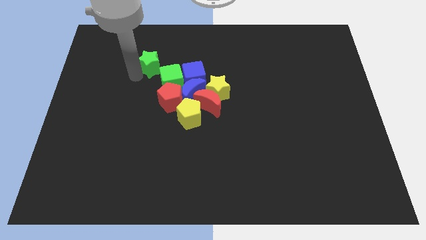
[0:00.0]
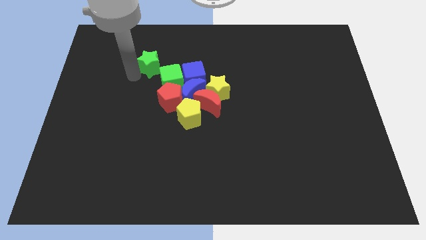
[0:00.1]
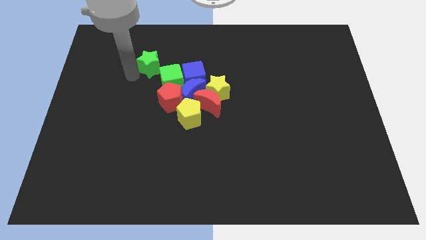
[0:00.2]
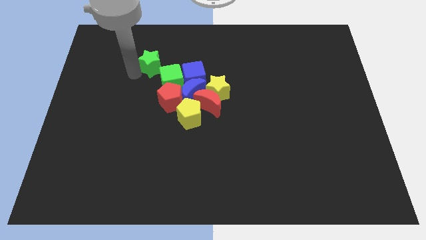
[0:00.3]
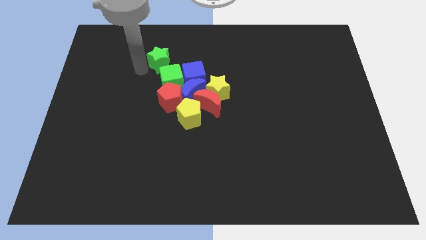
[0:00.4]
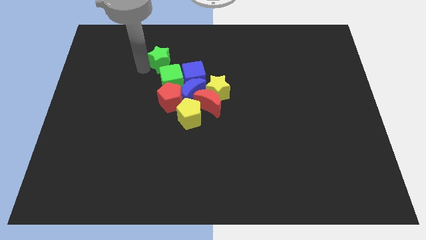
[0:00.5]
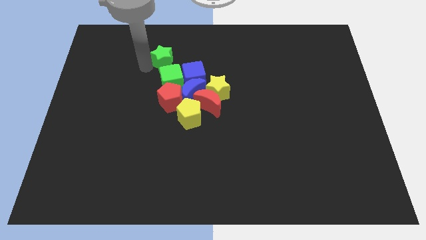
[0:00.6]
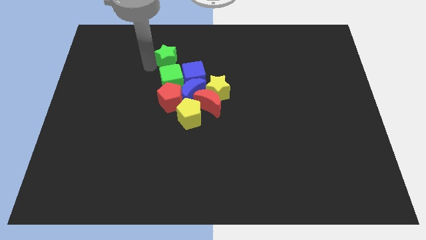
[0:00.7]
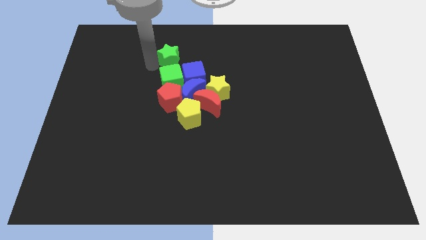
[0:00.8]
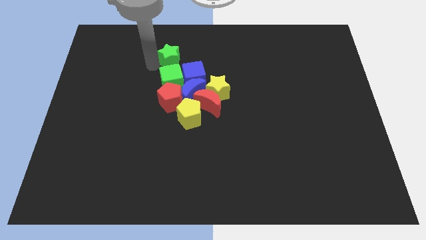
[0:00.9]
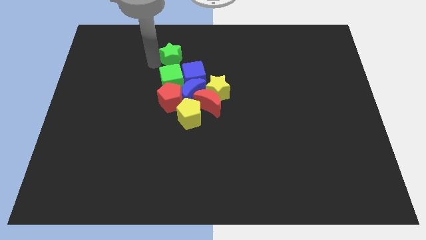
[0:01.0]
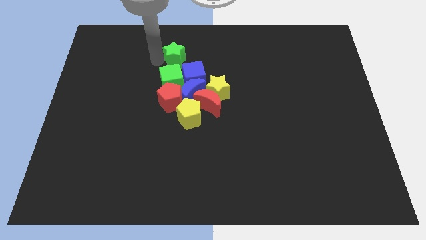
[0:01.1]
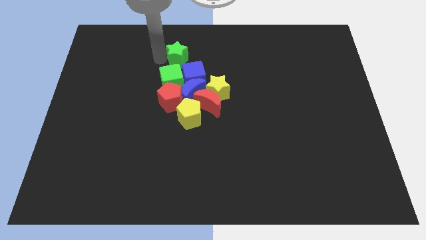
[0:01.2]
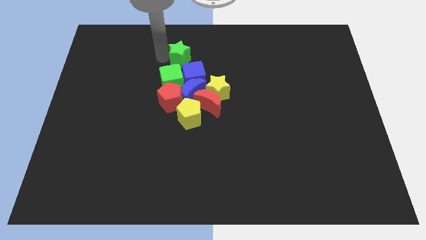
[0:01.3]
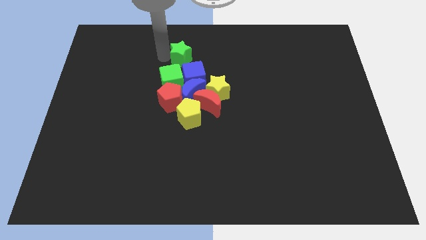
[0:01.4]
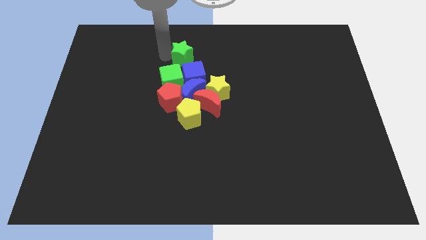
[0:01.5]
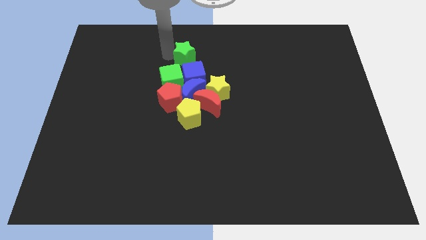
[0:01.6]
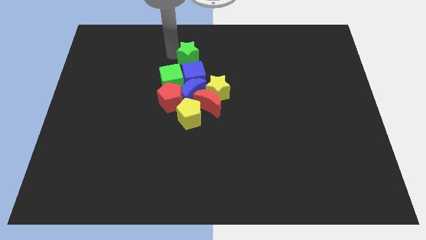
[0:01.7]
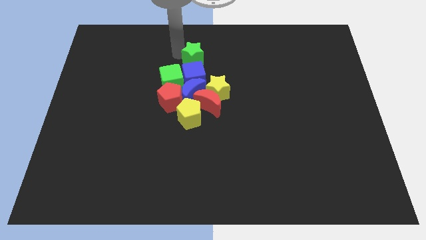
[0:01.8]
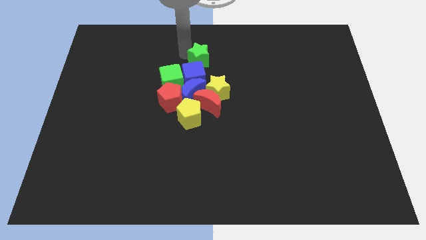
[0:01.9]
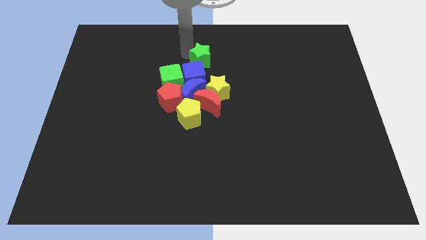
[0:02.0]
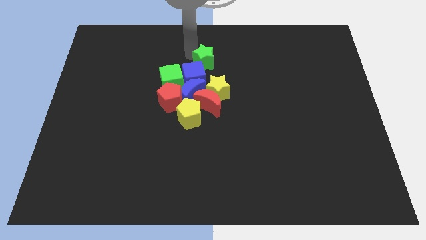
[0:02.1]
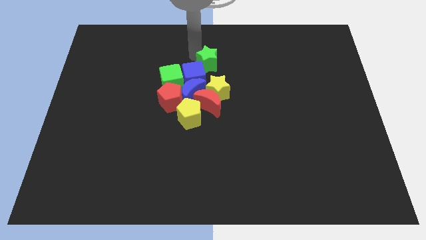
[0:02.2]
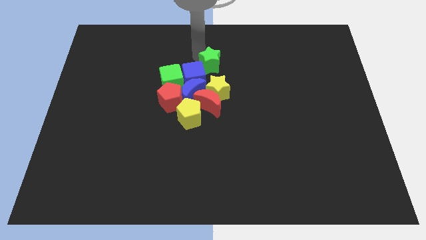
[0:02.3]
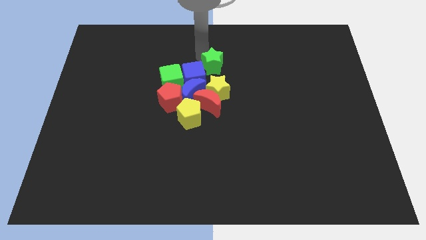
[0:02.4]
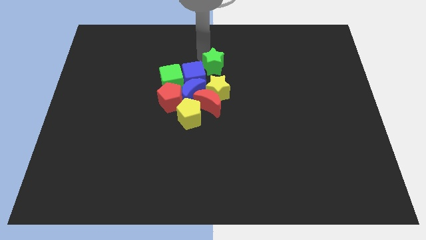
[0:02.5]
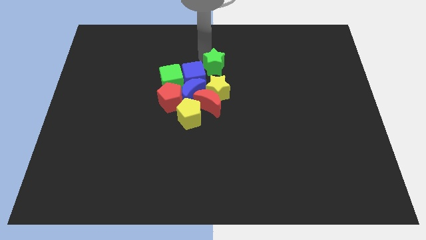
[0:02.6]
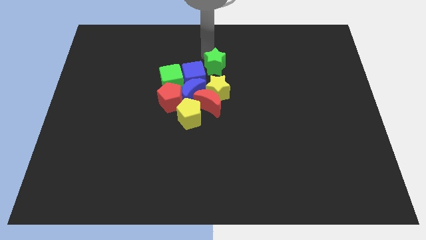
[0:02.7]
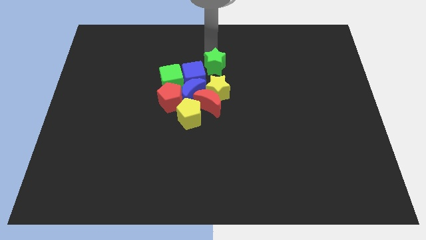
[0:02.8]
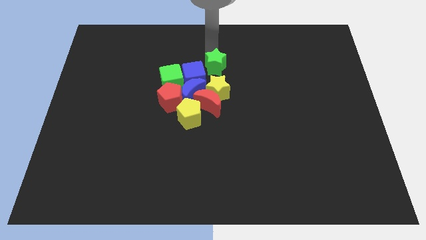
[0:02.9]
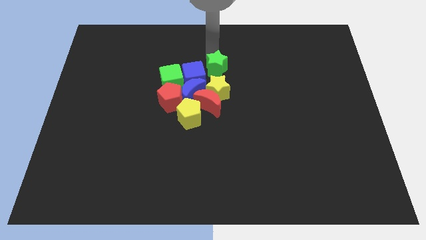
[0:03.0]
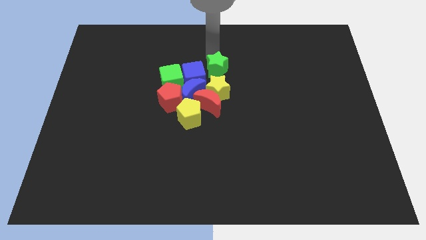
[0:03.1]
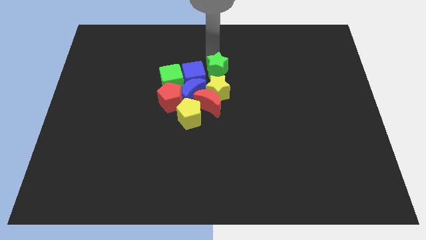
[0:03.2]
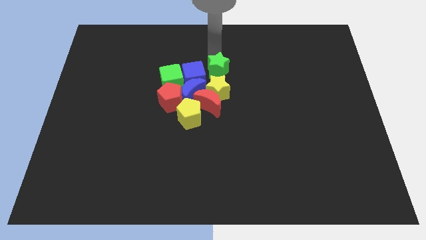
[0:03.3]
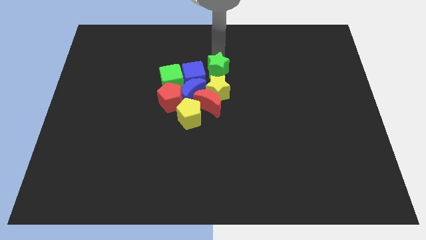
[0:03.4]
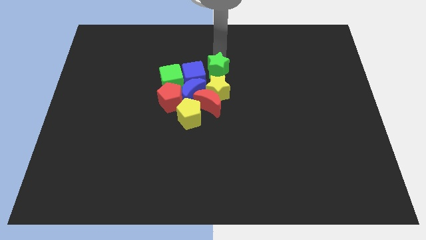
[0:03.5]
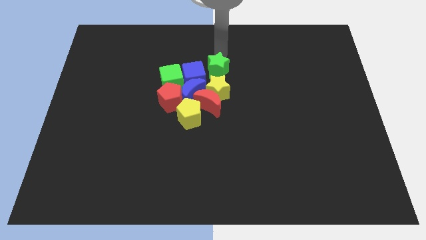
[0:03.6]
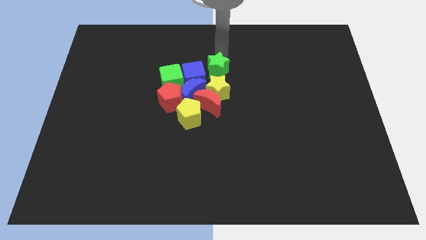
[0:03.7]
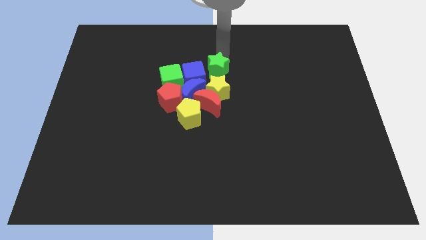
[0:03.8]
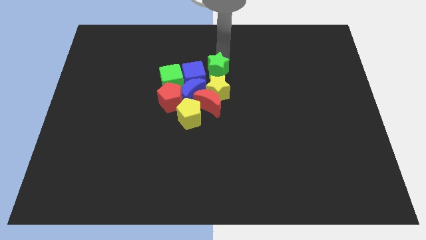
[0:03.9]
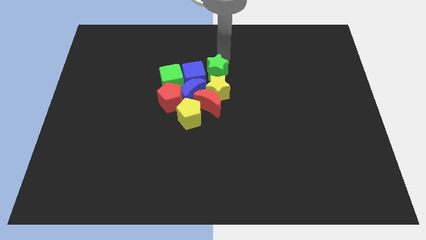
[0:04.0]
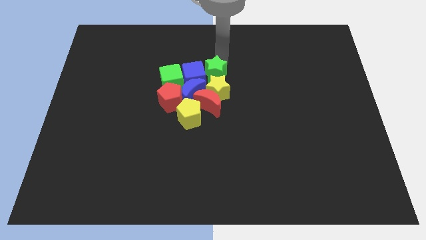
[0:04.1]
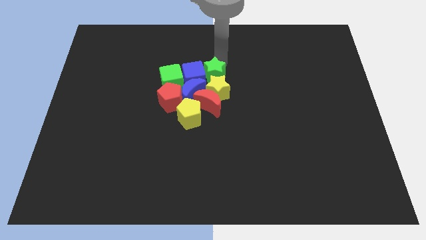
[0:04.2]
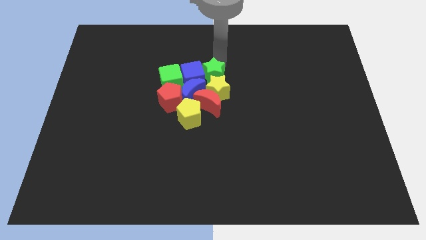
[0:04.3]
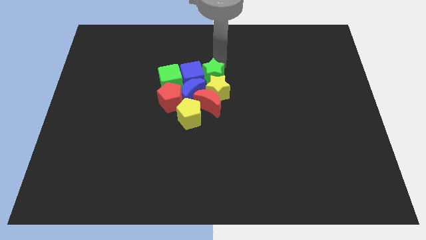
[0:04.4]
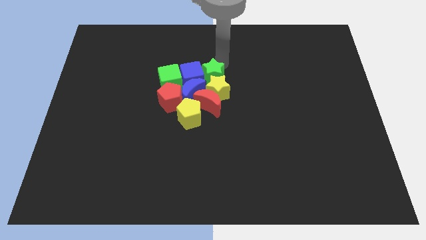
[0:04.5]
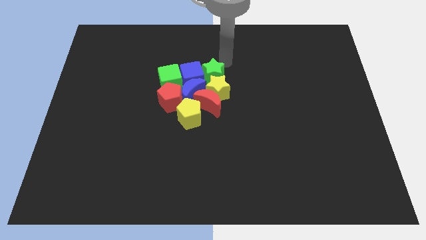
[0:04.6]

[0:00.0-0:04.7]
place the green star to the right of the blue cube

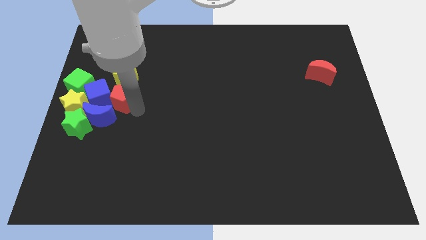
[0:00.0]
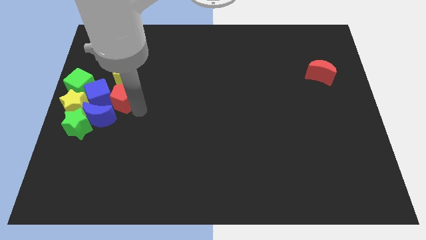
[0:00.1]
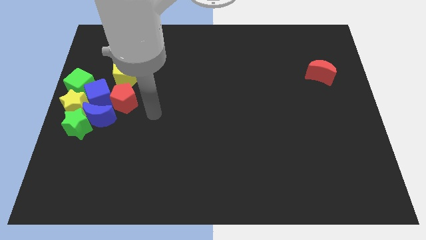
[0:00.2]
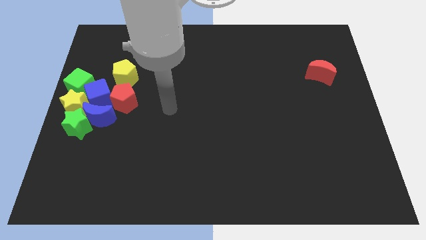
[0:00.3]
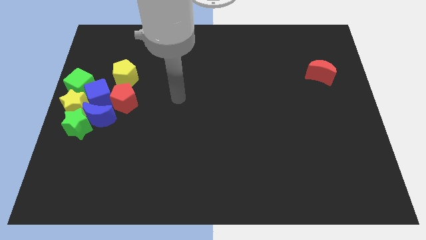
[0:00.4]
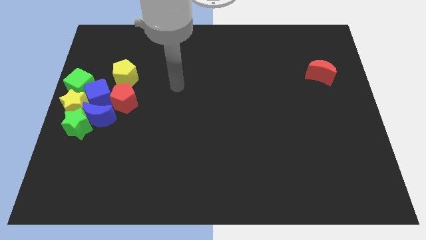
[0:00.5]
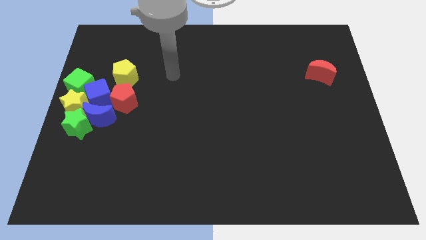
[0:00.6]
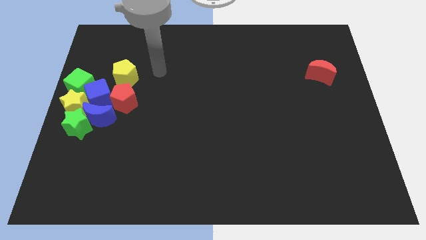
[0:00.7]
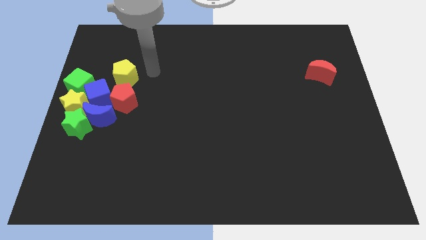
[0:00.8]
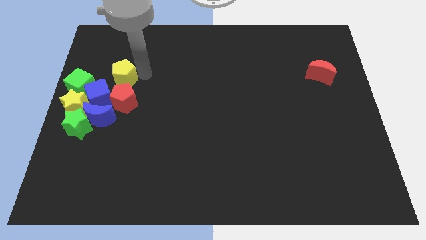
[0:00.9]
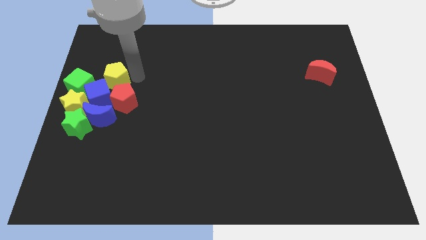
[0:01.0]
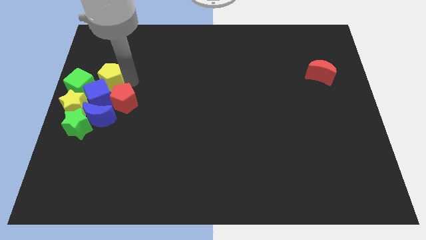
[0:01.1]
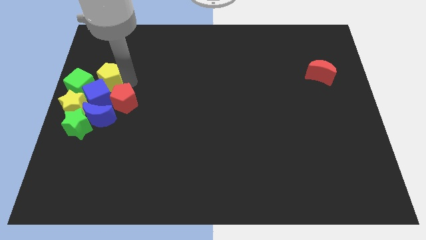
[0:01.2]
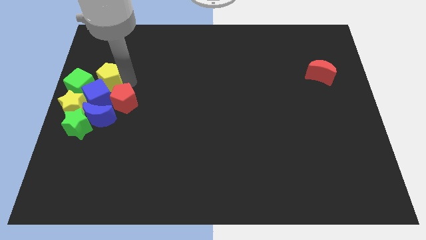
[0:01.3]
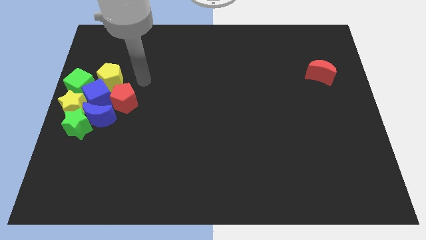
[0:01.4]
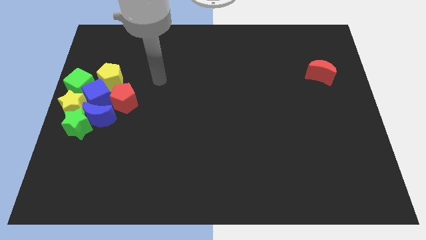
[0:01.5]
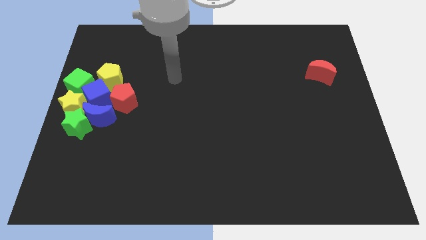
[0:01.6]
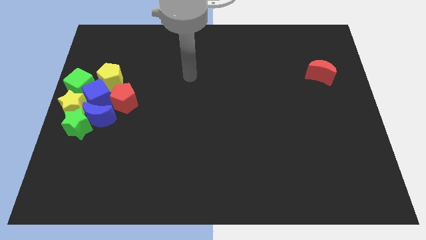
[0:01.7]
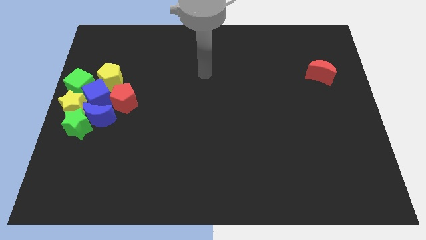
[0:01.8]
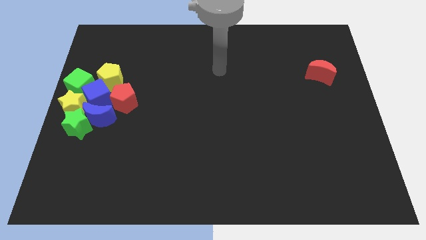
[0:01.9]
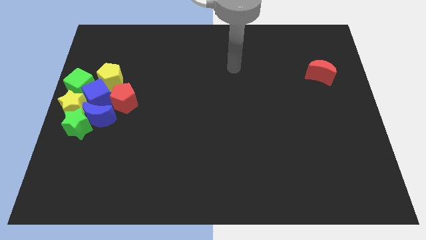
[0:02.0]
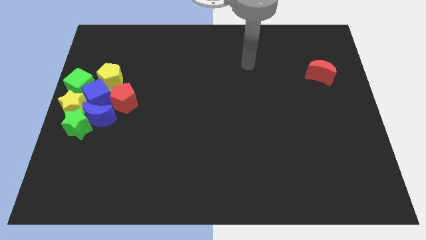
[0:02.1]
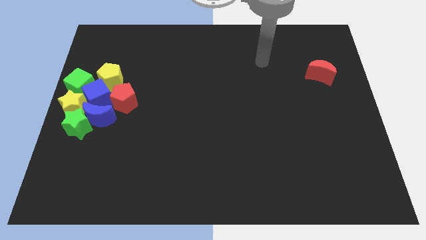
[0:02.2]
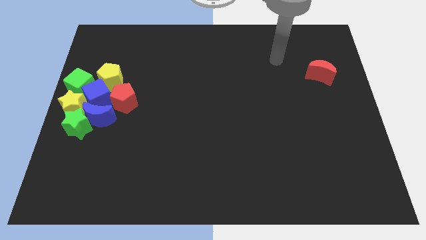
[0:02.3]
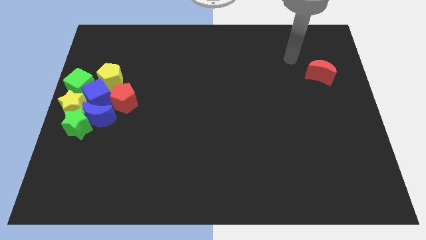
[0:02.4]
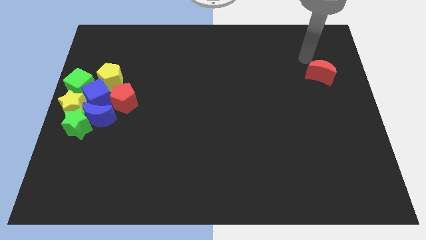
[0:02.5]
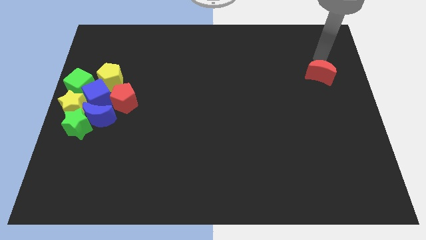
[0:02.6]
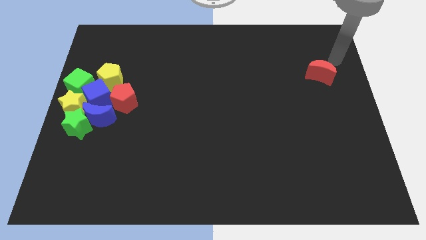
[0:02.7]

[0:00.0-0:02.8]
move the yellow pentagon to the top of the blue cube

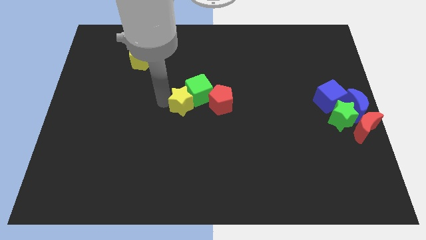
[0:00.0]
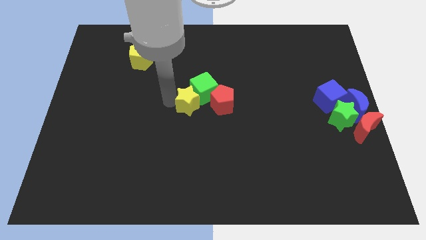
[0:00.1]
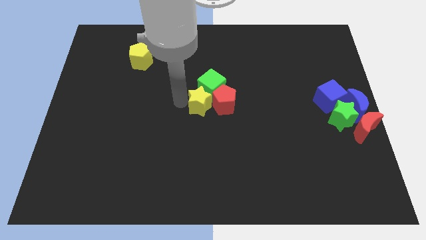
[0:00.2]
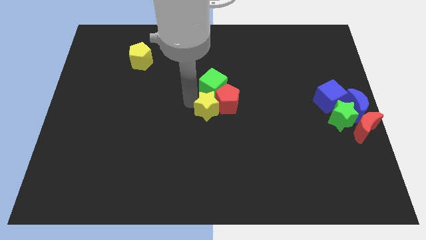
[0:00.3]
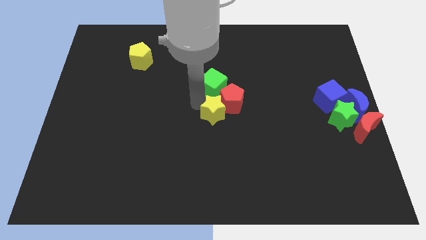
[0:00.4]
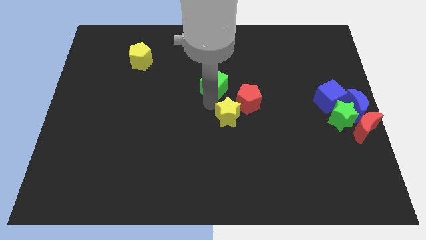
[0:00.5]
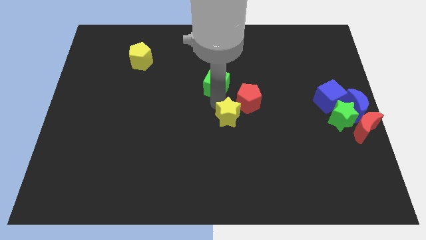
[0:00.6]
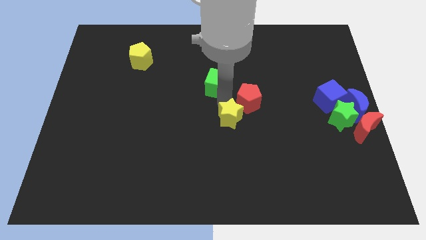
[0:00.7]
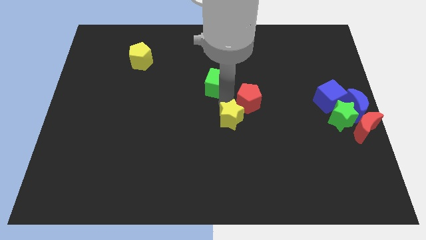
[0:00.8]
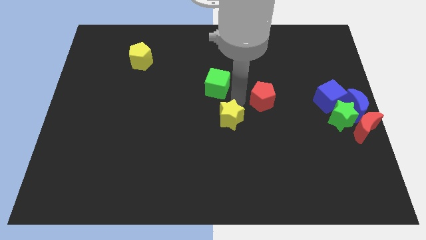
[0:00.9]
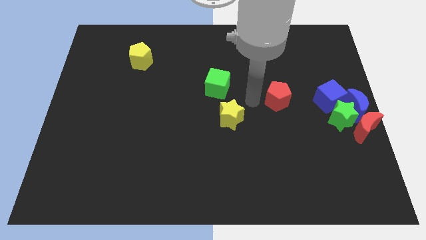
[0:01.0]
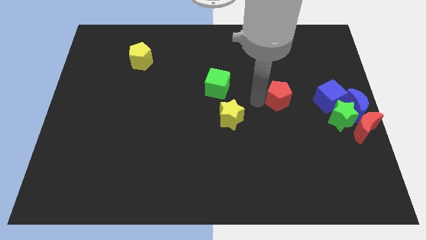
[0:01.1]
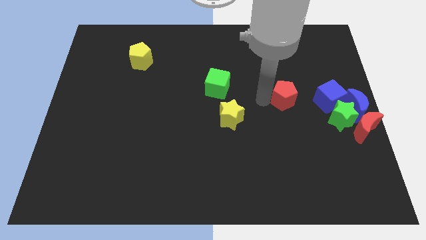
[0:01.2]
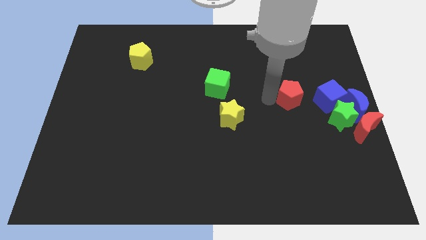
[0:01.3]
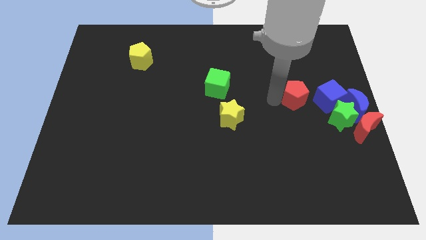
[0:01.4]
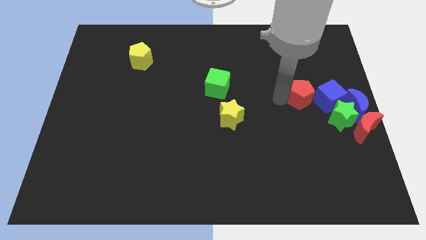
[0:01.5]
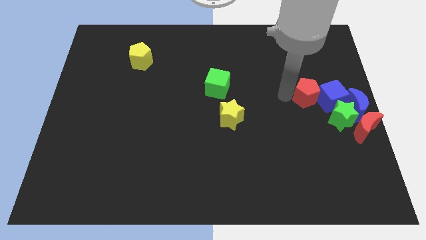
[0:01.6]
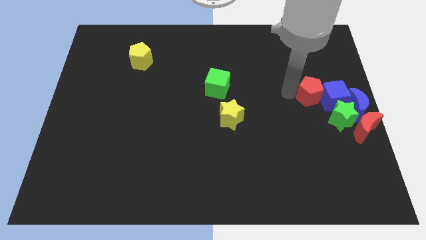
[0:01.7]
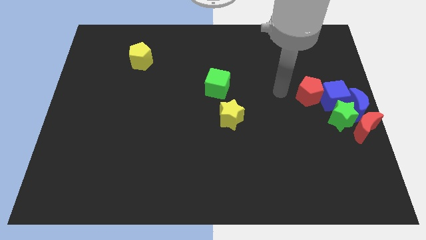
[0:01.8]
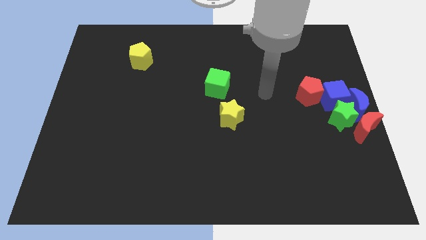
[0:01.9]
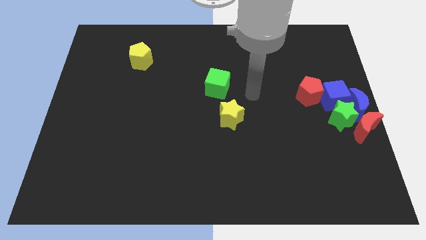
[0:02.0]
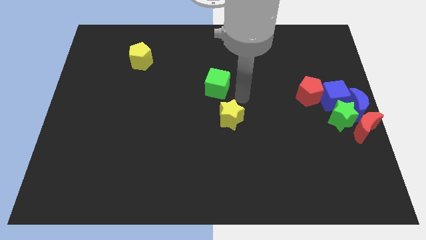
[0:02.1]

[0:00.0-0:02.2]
push red pentagon into the blue cube
